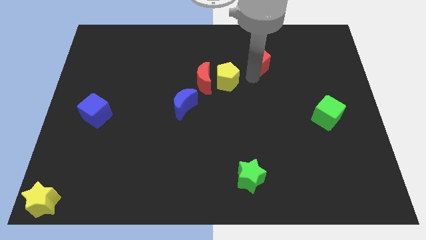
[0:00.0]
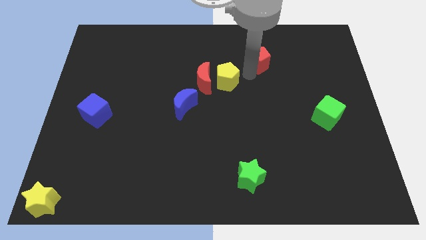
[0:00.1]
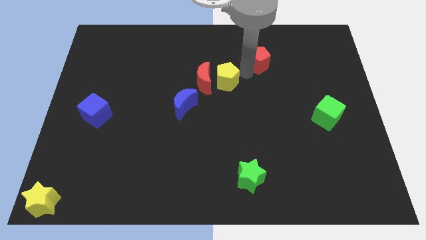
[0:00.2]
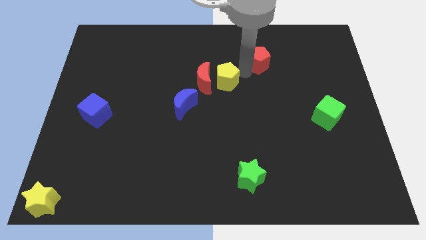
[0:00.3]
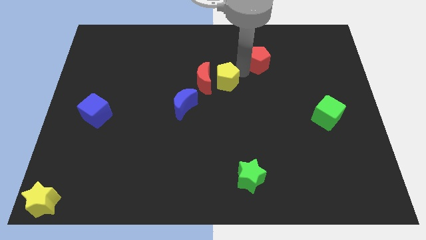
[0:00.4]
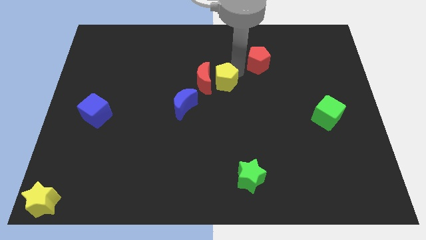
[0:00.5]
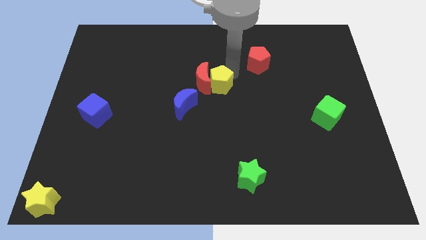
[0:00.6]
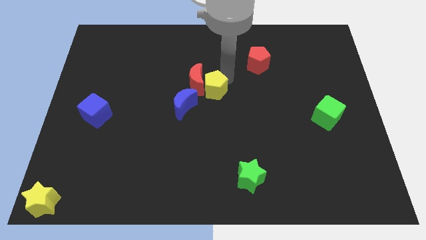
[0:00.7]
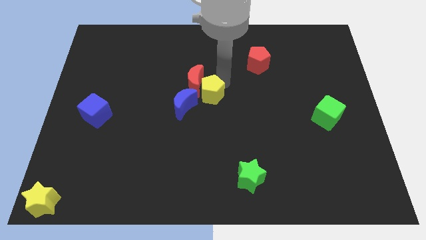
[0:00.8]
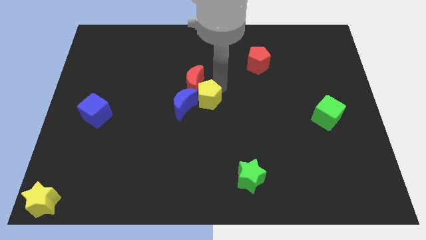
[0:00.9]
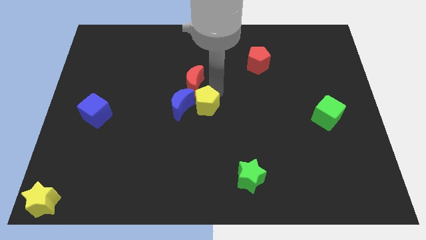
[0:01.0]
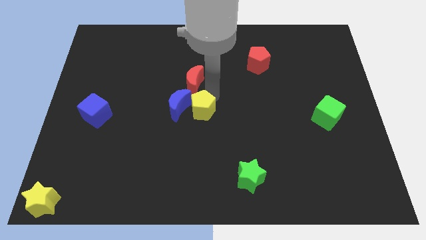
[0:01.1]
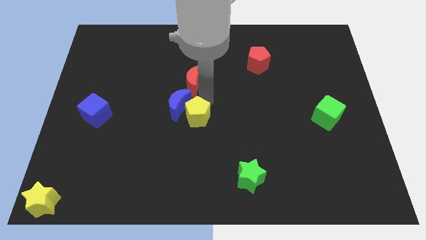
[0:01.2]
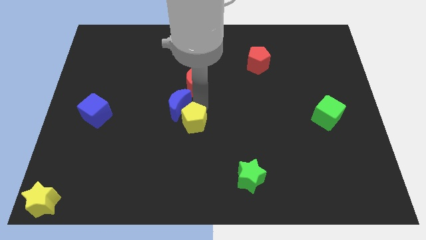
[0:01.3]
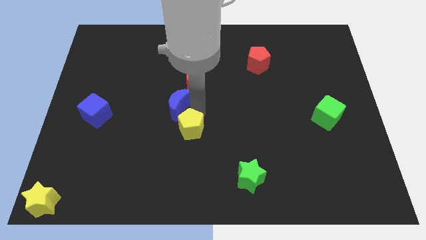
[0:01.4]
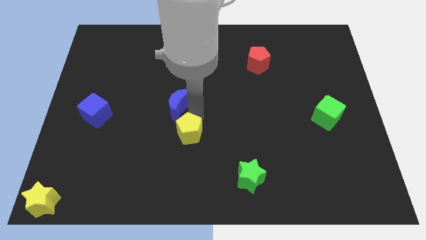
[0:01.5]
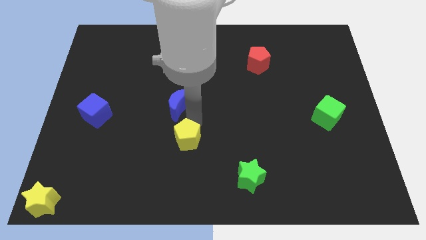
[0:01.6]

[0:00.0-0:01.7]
move the yellow pentagon below the blue crescent

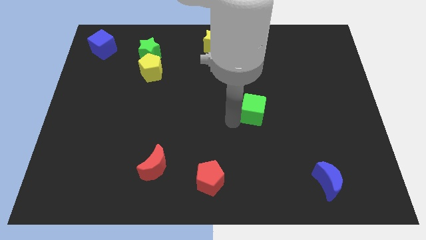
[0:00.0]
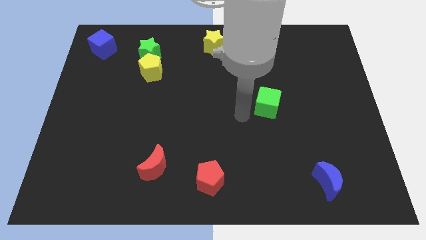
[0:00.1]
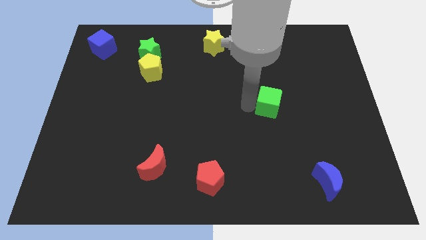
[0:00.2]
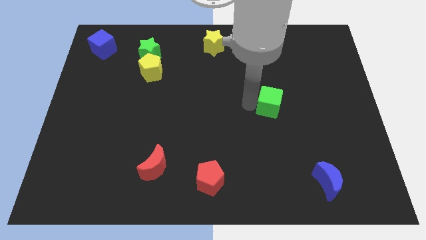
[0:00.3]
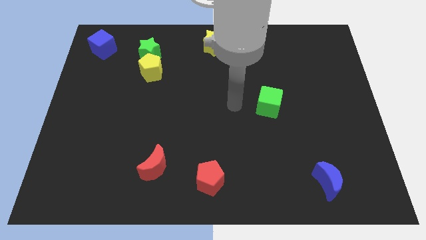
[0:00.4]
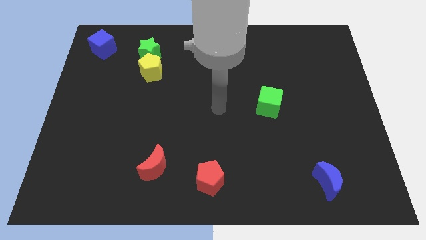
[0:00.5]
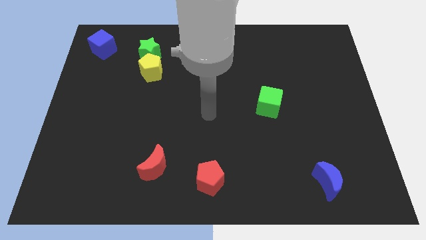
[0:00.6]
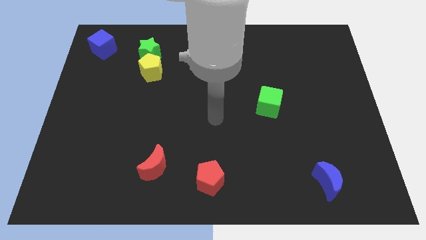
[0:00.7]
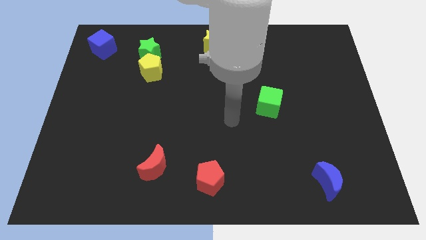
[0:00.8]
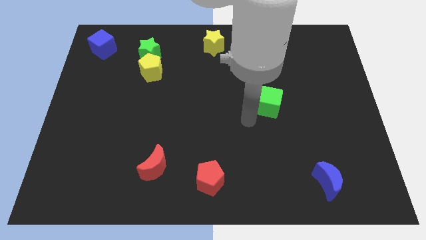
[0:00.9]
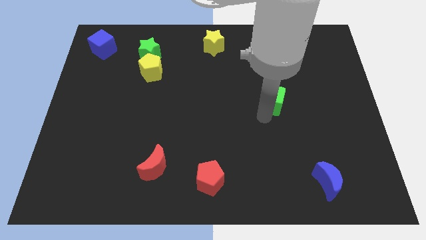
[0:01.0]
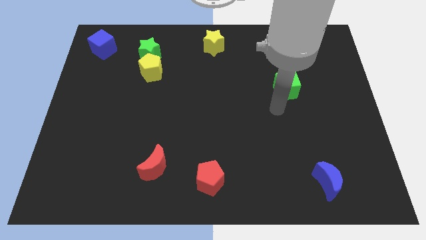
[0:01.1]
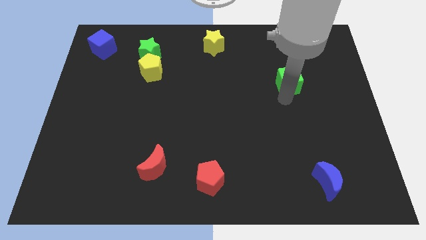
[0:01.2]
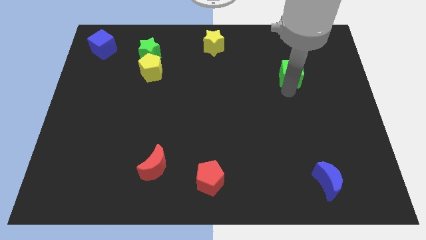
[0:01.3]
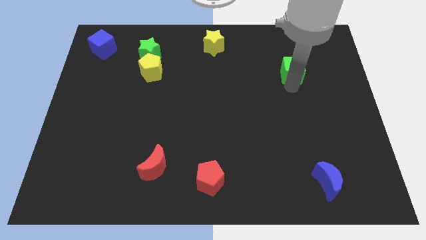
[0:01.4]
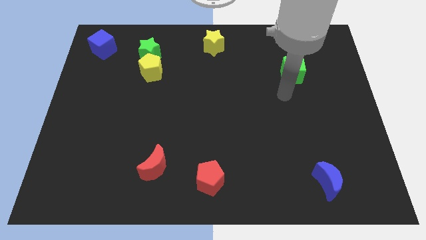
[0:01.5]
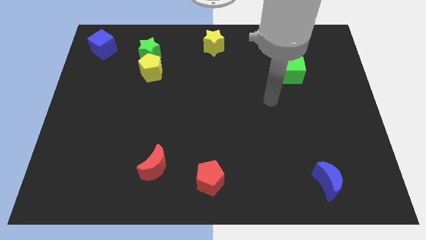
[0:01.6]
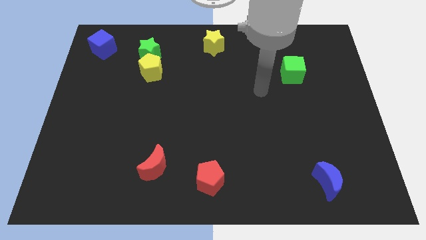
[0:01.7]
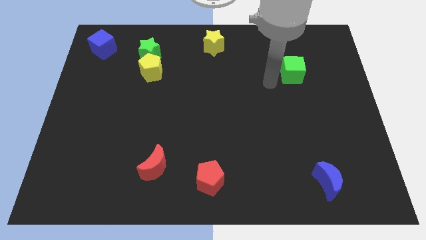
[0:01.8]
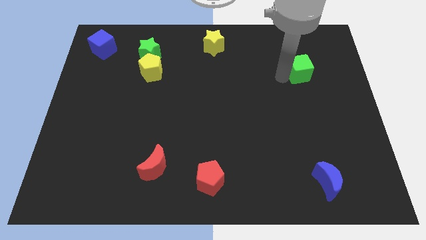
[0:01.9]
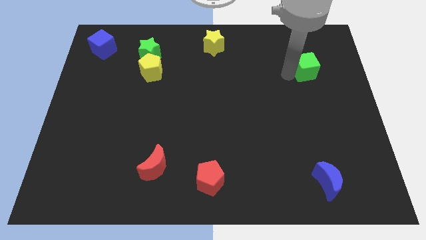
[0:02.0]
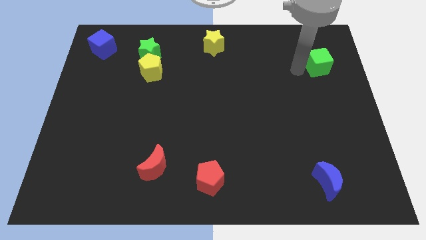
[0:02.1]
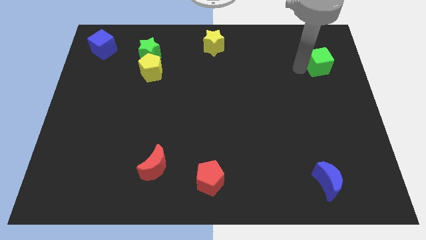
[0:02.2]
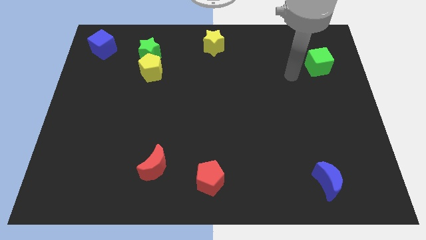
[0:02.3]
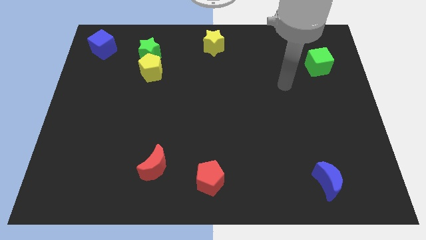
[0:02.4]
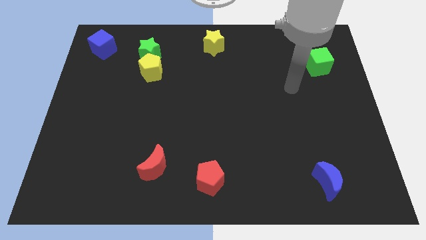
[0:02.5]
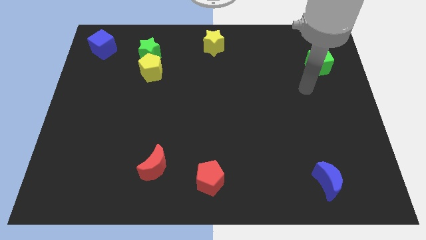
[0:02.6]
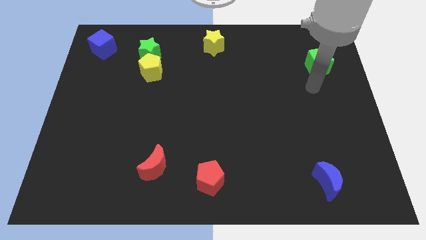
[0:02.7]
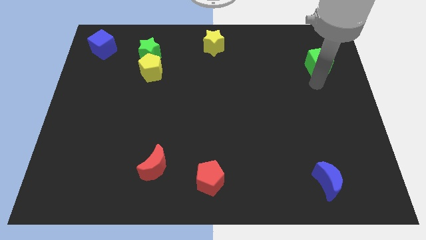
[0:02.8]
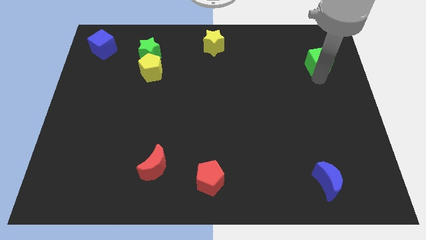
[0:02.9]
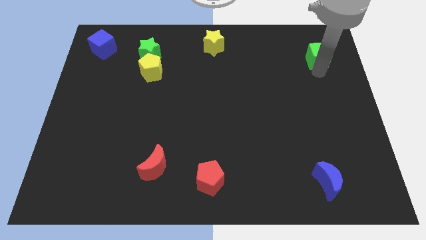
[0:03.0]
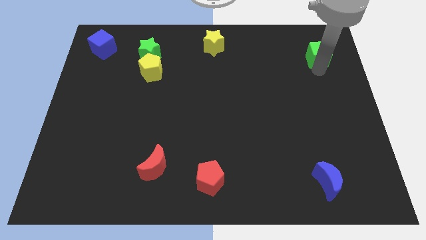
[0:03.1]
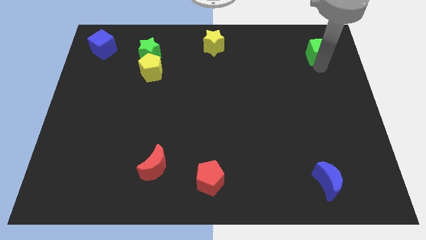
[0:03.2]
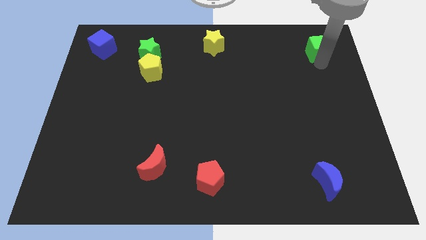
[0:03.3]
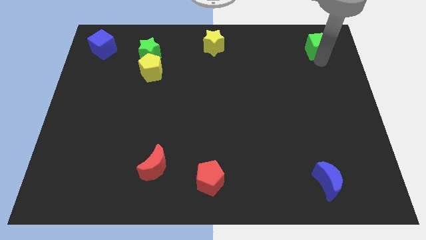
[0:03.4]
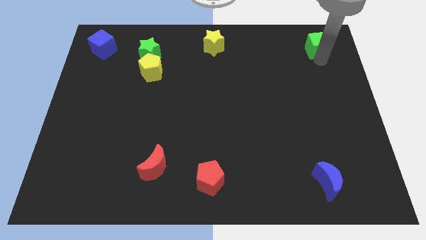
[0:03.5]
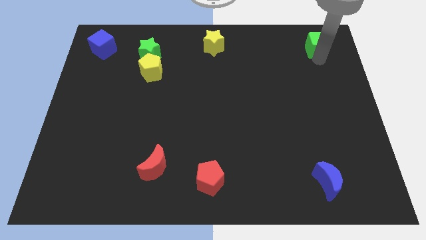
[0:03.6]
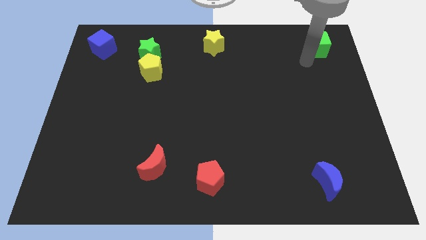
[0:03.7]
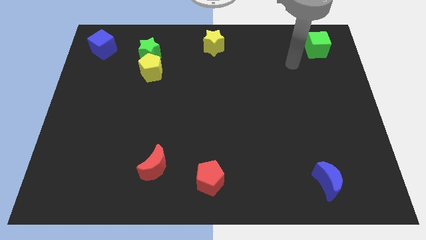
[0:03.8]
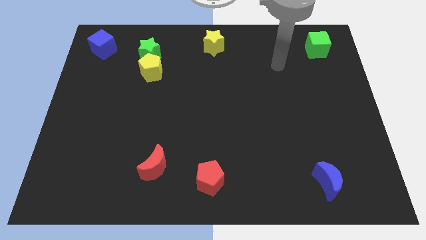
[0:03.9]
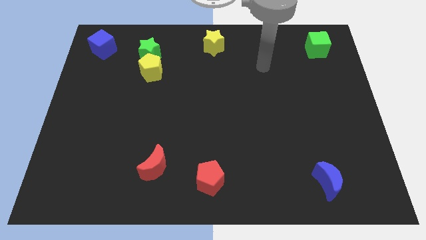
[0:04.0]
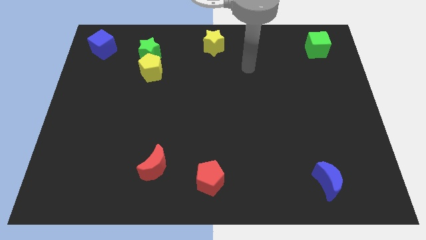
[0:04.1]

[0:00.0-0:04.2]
move the green cube to the top right

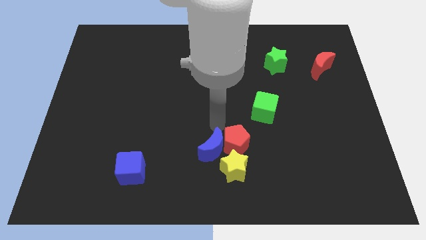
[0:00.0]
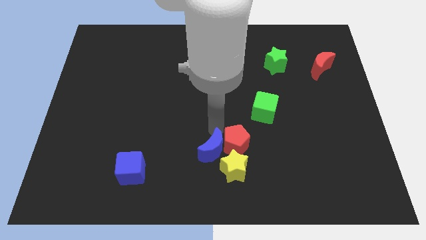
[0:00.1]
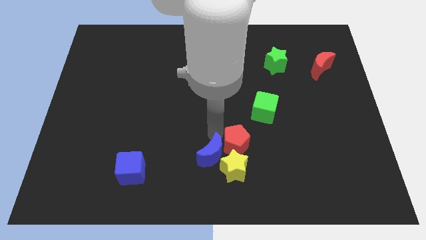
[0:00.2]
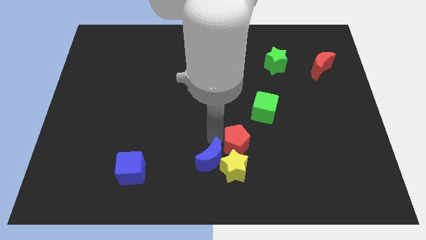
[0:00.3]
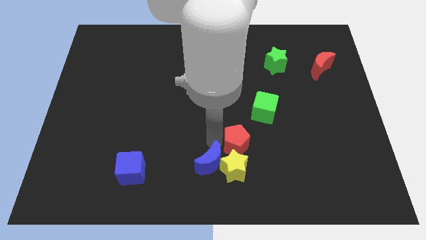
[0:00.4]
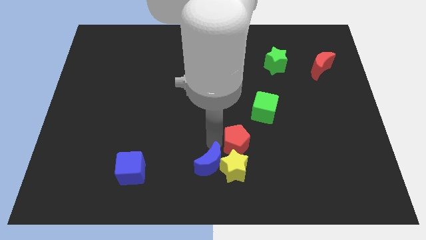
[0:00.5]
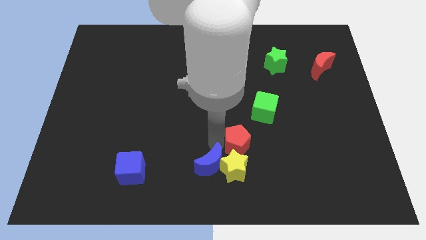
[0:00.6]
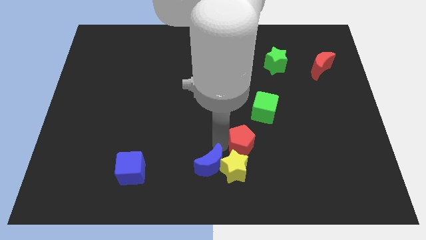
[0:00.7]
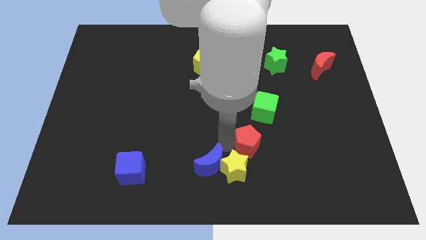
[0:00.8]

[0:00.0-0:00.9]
move the blue crescent downwards to yellow star

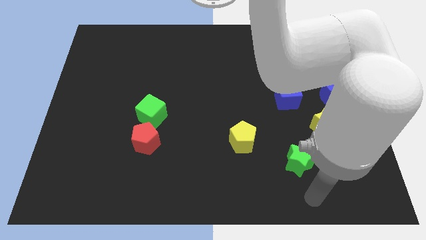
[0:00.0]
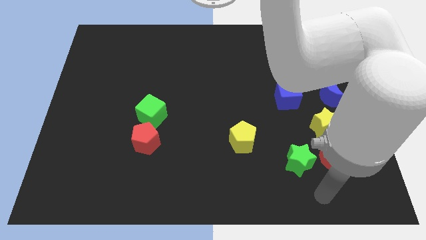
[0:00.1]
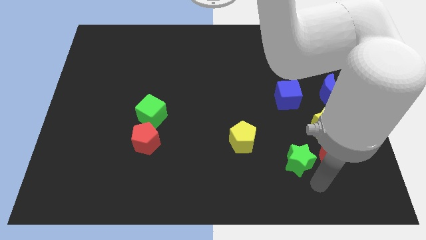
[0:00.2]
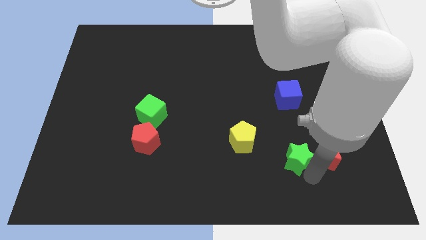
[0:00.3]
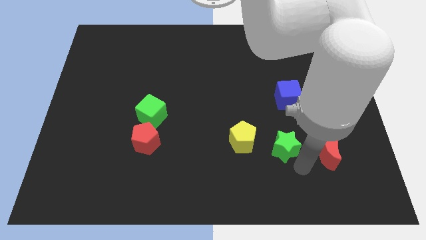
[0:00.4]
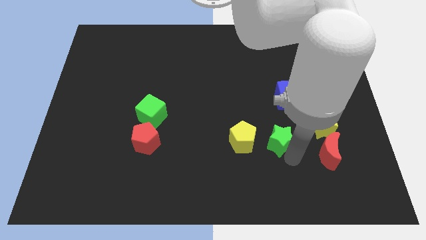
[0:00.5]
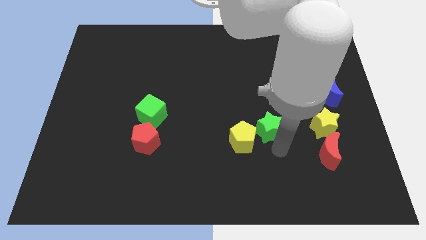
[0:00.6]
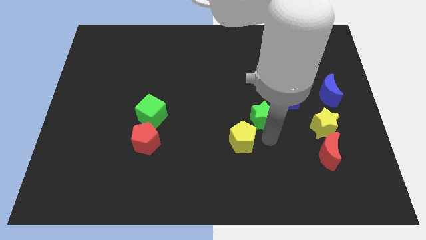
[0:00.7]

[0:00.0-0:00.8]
place the green star in between the yellow pentagon and blue cube

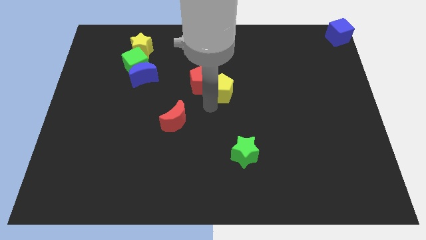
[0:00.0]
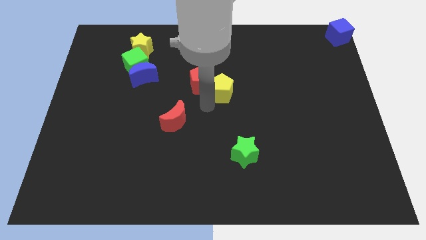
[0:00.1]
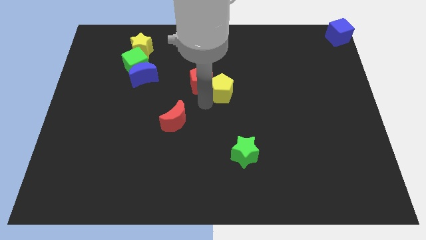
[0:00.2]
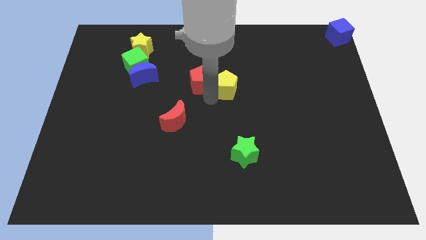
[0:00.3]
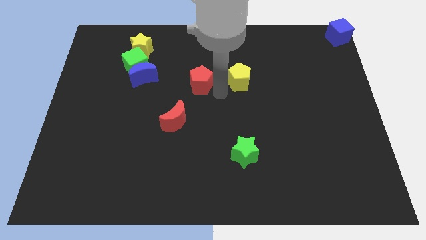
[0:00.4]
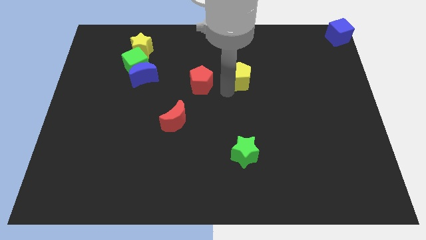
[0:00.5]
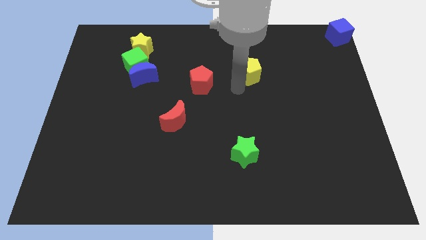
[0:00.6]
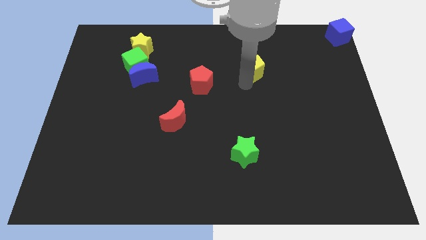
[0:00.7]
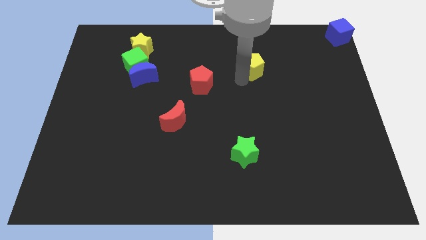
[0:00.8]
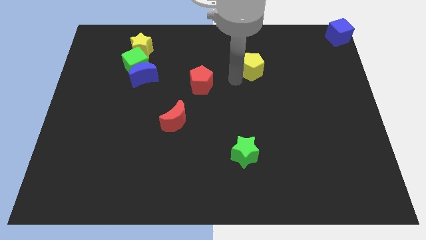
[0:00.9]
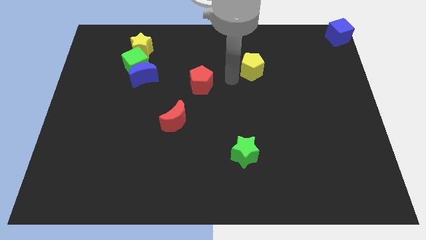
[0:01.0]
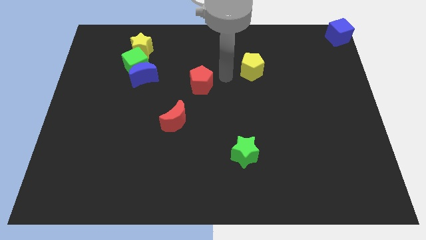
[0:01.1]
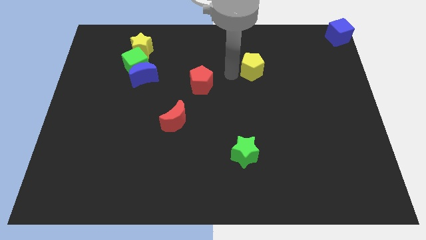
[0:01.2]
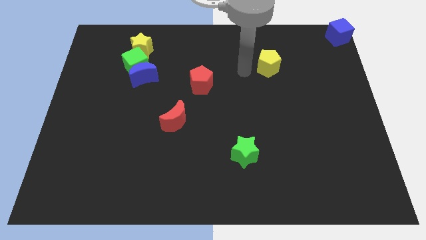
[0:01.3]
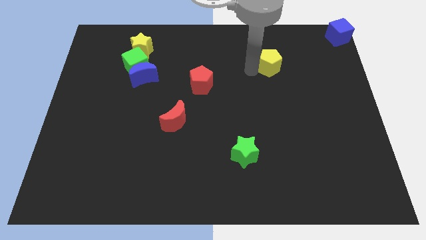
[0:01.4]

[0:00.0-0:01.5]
slide the yellow pentagon towards the top right of the board
